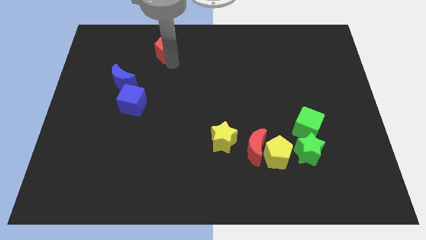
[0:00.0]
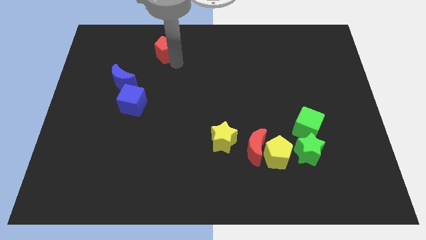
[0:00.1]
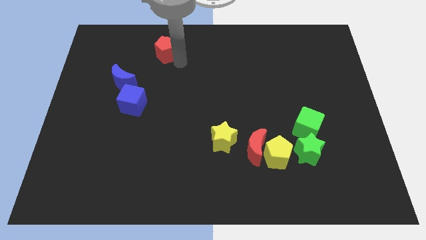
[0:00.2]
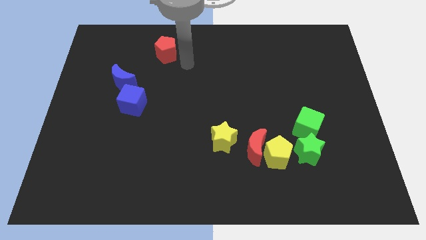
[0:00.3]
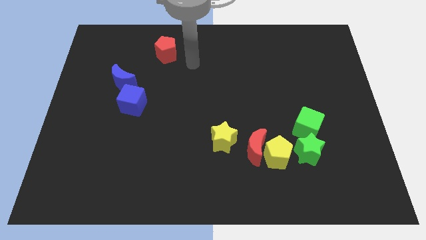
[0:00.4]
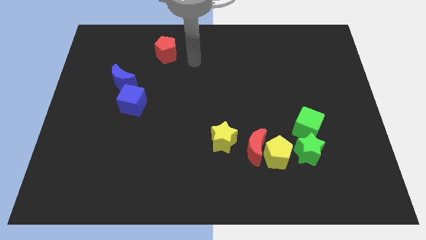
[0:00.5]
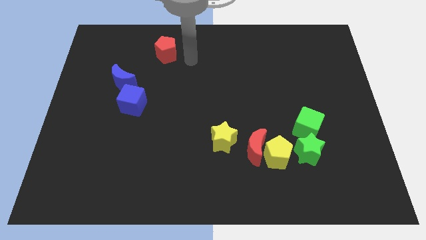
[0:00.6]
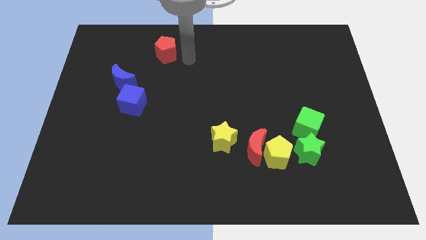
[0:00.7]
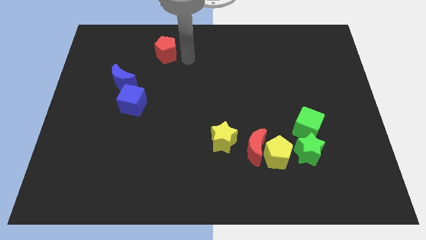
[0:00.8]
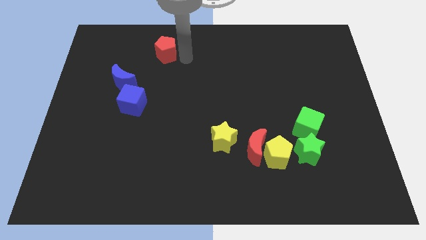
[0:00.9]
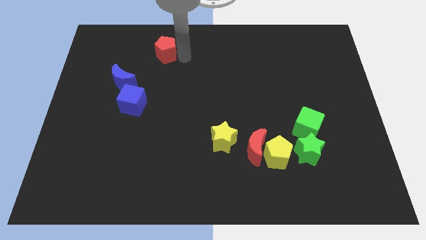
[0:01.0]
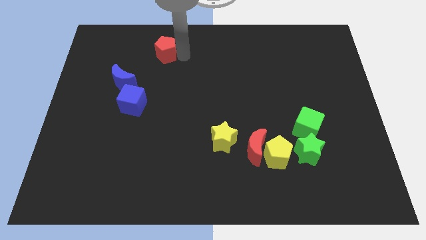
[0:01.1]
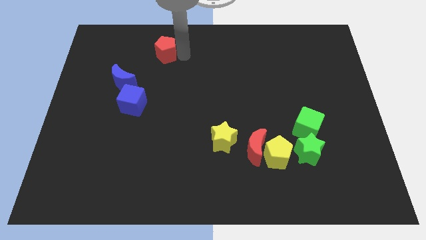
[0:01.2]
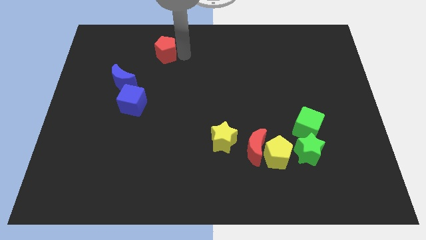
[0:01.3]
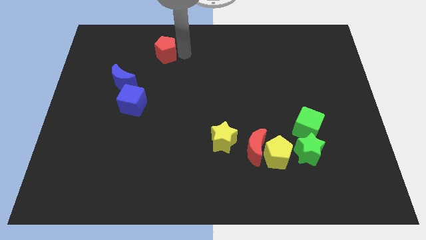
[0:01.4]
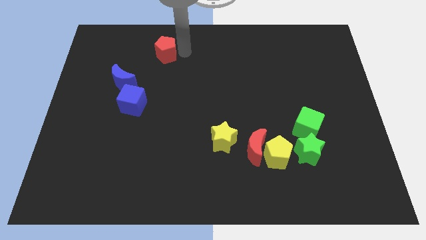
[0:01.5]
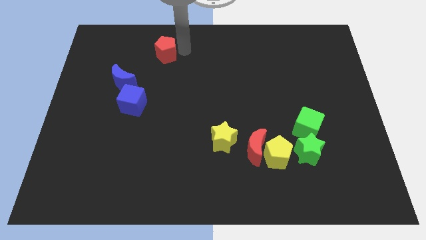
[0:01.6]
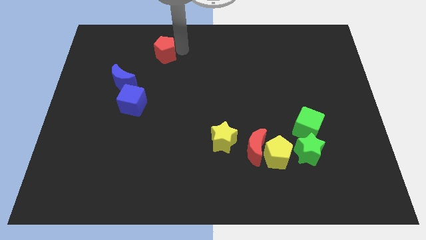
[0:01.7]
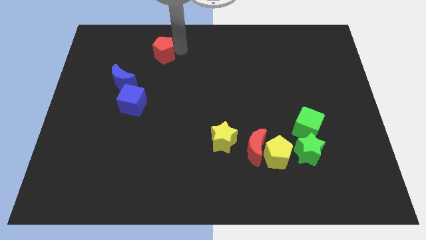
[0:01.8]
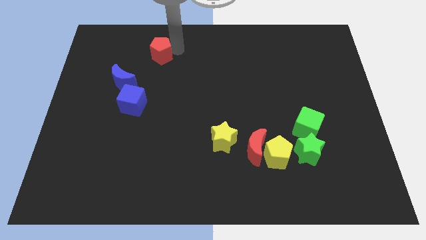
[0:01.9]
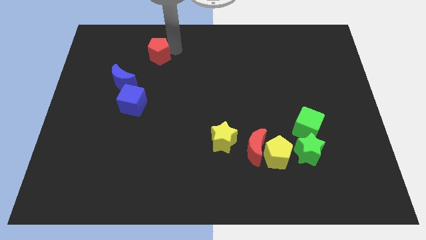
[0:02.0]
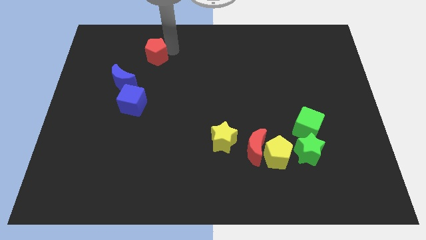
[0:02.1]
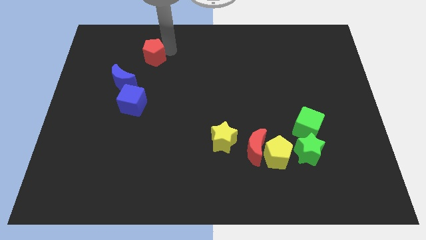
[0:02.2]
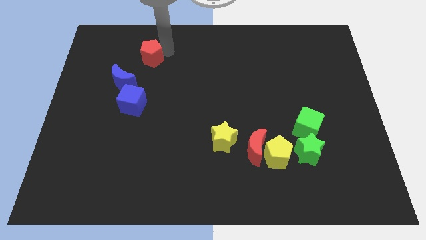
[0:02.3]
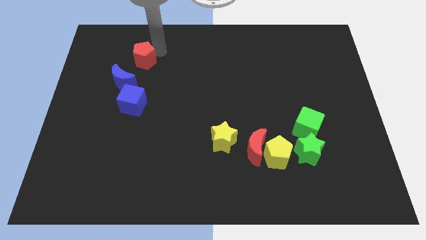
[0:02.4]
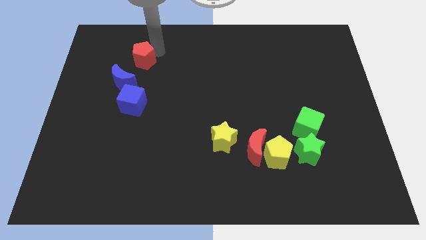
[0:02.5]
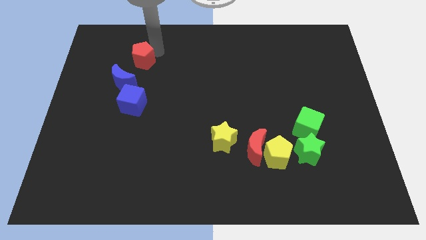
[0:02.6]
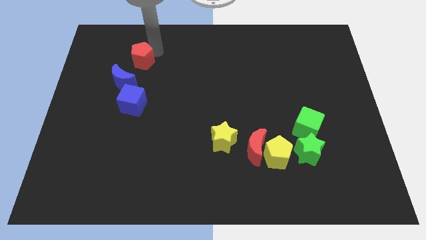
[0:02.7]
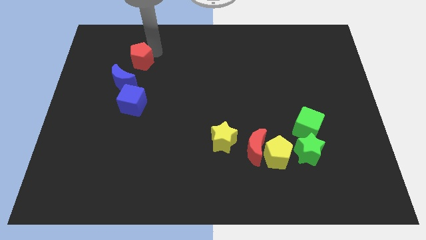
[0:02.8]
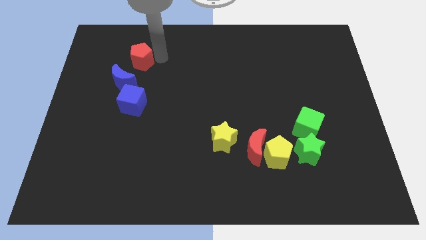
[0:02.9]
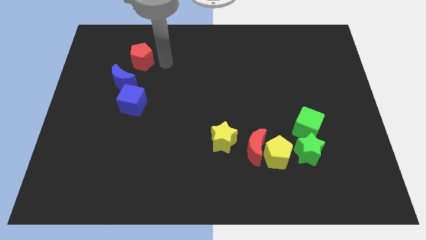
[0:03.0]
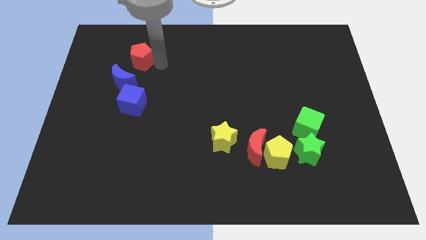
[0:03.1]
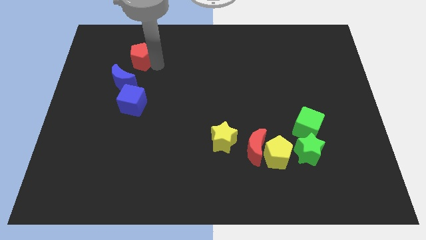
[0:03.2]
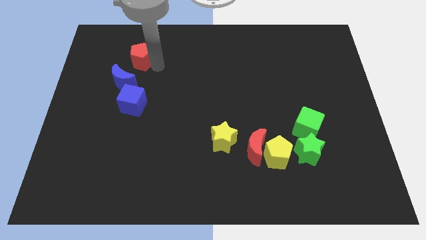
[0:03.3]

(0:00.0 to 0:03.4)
slide the red pentagon to the top side of the blue moon

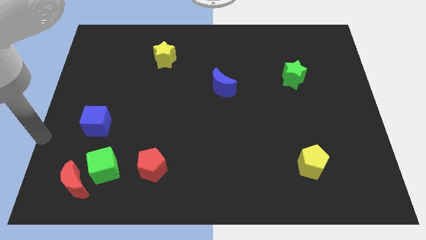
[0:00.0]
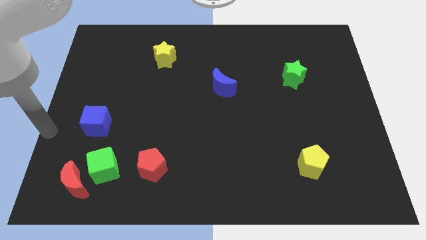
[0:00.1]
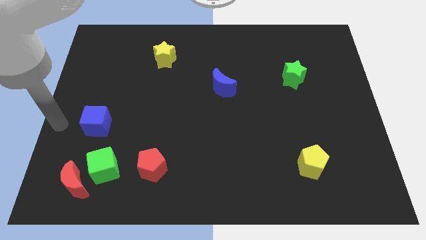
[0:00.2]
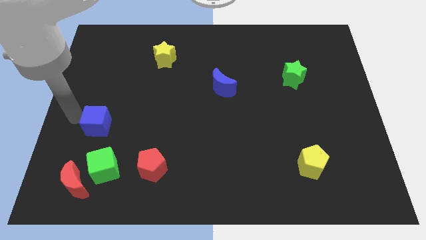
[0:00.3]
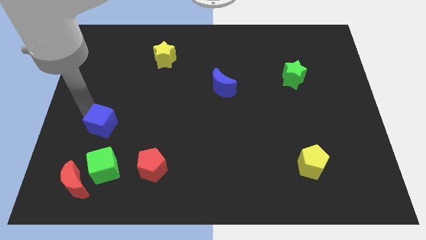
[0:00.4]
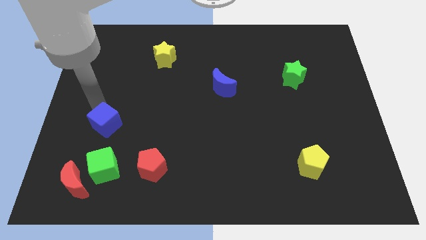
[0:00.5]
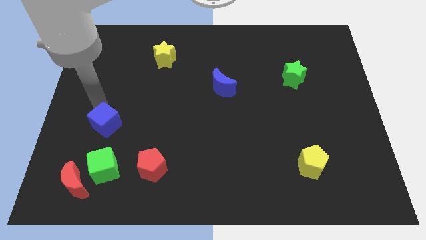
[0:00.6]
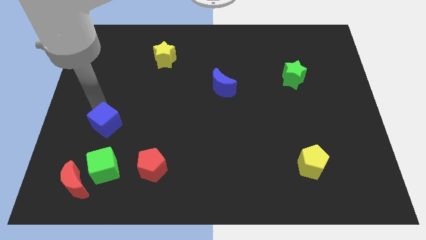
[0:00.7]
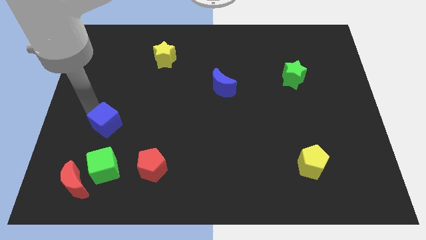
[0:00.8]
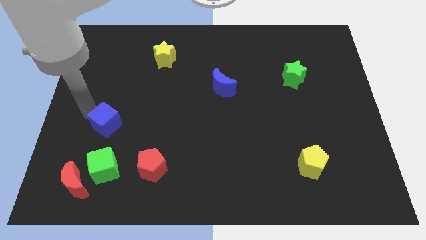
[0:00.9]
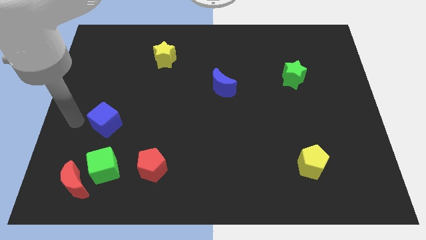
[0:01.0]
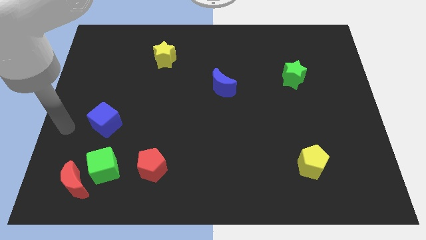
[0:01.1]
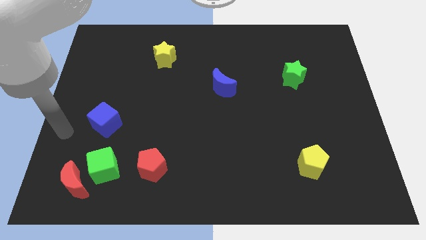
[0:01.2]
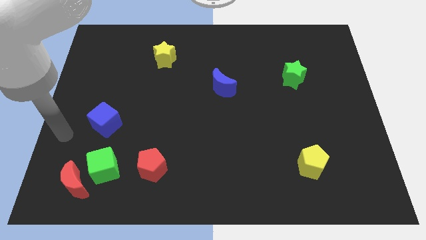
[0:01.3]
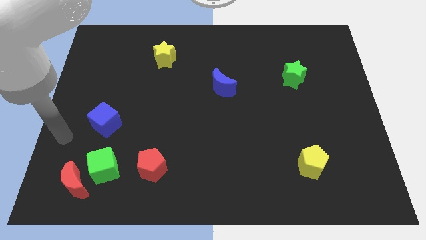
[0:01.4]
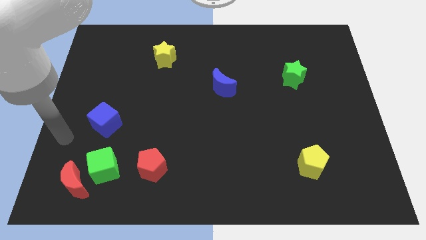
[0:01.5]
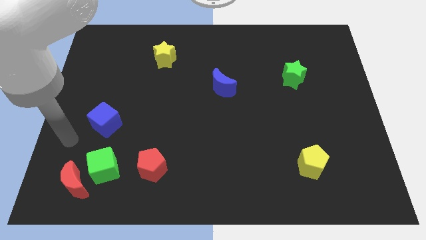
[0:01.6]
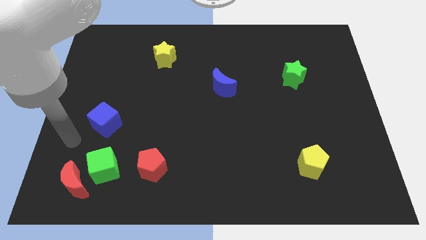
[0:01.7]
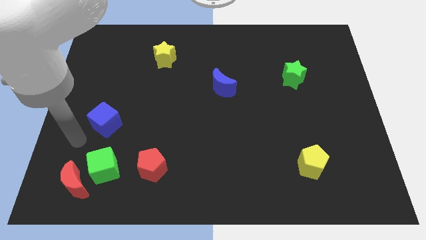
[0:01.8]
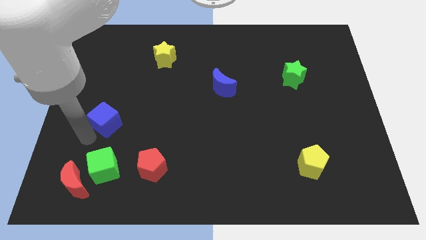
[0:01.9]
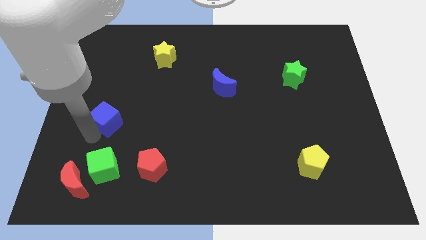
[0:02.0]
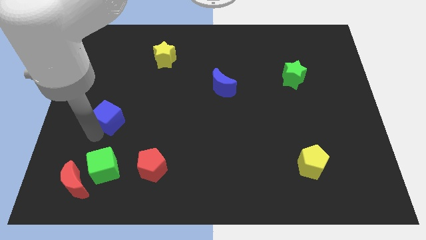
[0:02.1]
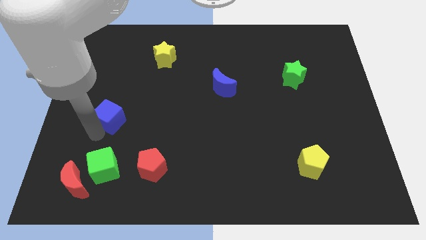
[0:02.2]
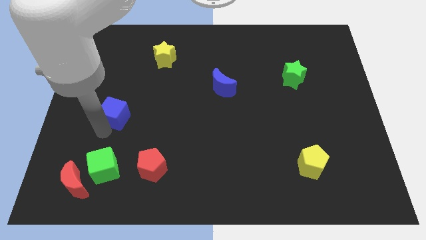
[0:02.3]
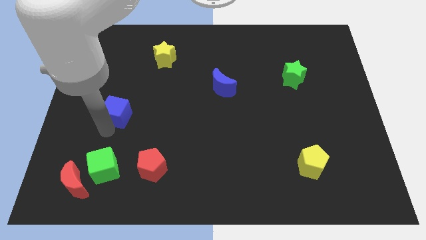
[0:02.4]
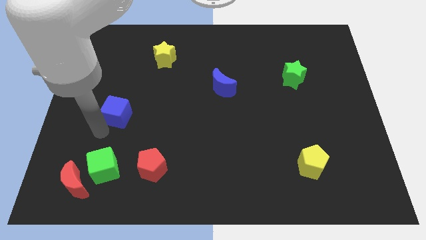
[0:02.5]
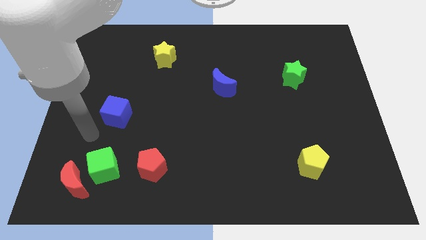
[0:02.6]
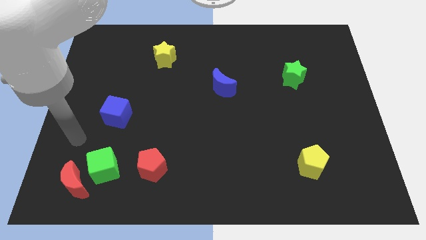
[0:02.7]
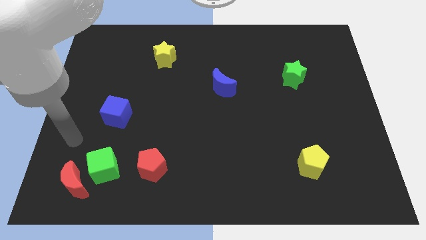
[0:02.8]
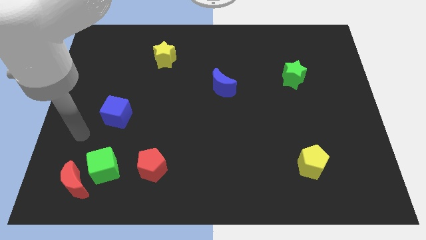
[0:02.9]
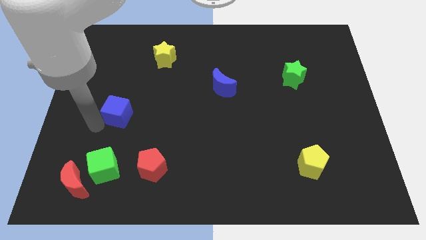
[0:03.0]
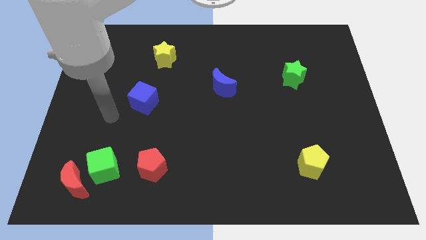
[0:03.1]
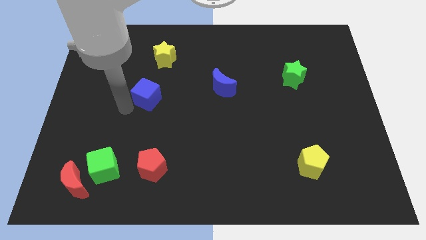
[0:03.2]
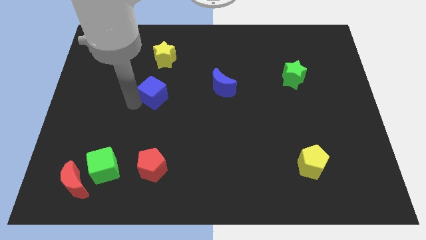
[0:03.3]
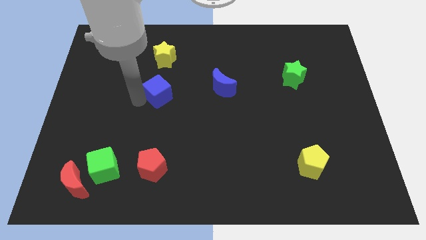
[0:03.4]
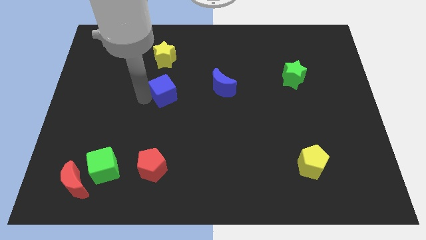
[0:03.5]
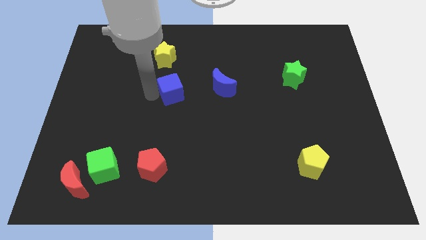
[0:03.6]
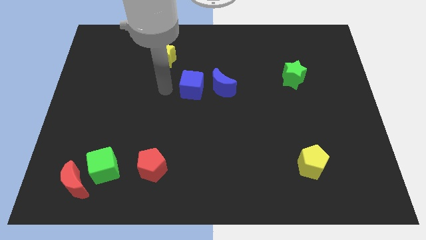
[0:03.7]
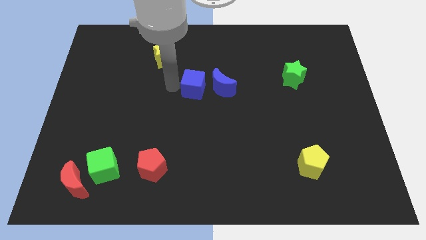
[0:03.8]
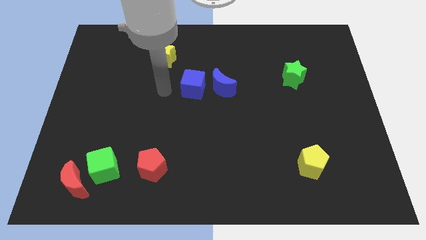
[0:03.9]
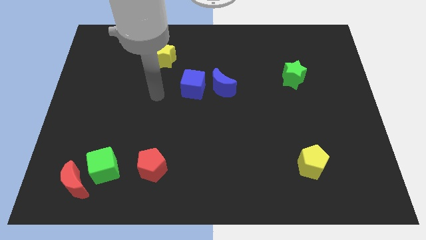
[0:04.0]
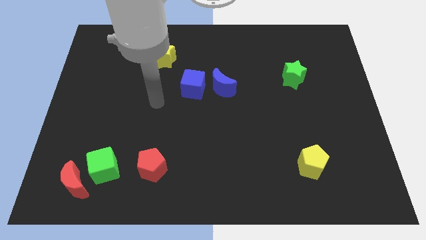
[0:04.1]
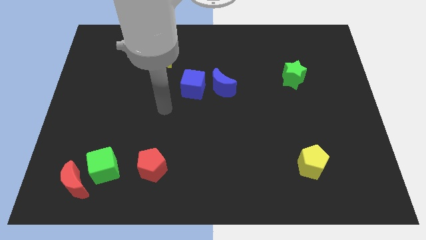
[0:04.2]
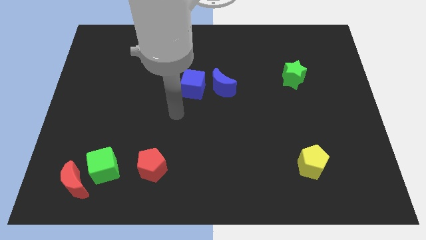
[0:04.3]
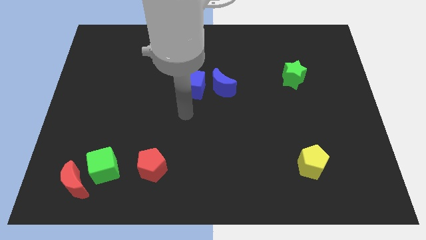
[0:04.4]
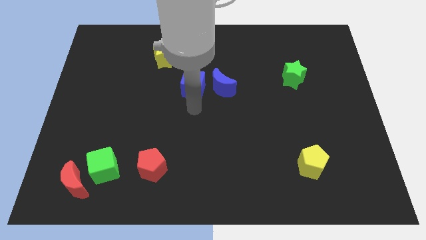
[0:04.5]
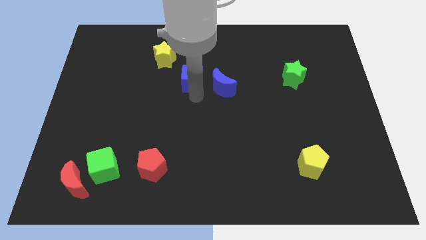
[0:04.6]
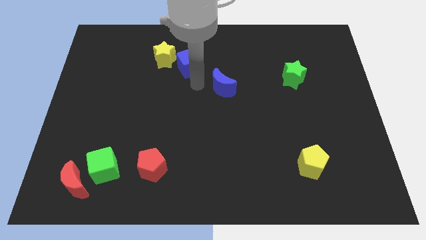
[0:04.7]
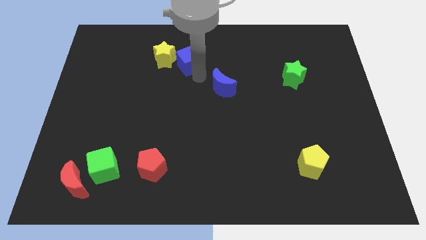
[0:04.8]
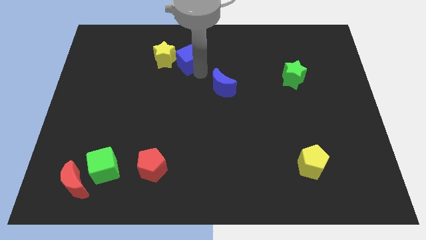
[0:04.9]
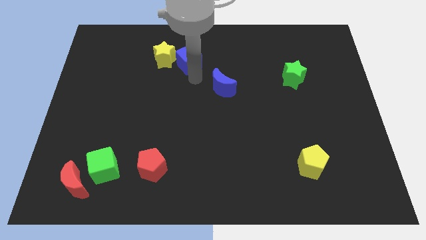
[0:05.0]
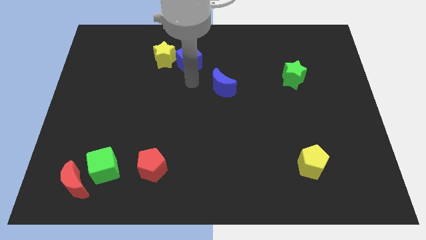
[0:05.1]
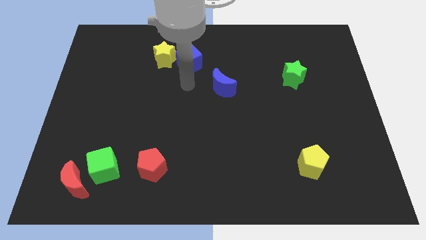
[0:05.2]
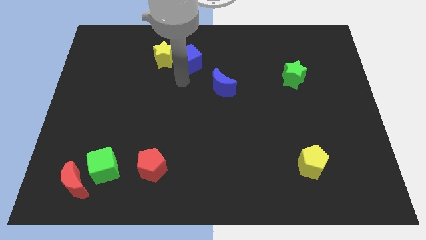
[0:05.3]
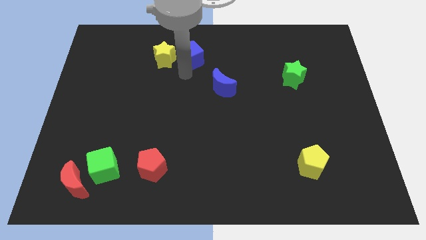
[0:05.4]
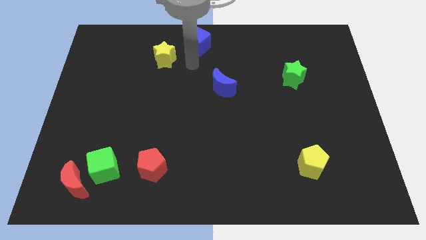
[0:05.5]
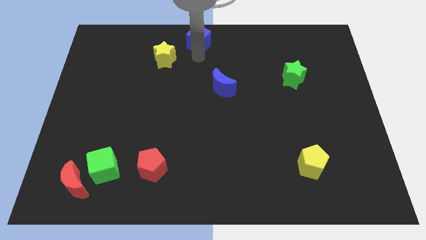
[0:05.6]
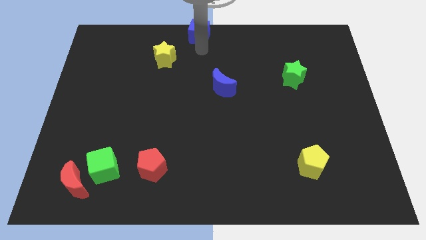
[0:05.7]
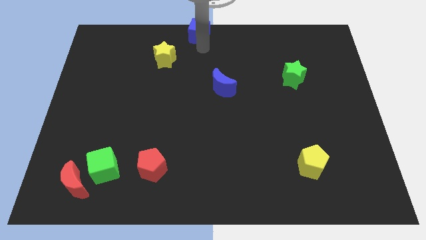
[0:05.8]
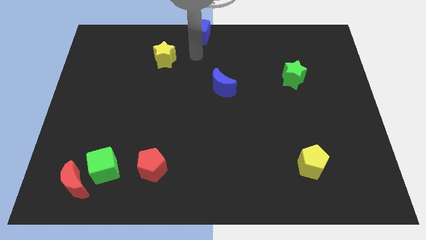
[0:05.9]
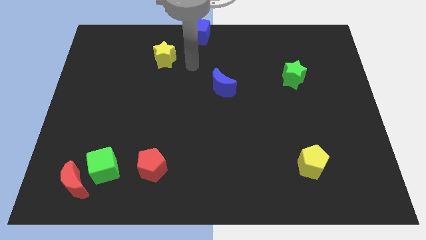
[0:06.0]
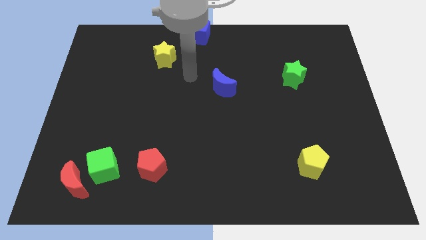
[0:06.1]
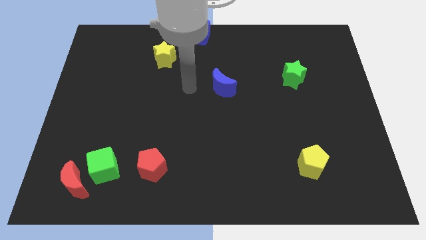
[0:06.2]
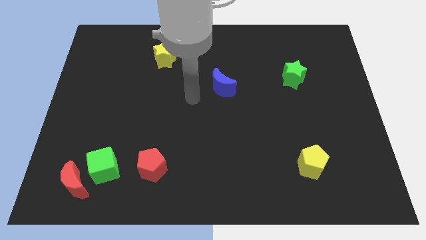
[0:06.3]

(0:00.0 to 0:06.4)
push the blue cube to the top middle of the board
